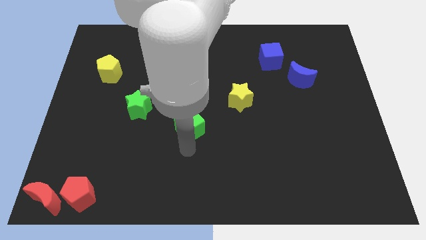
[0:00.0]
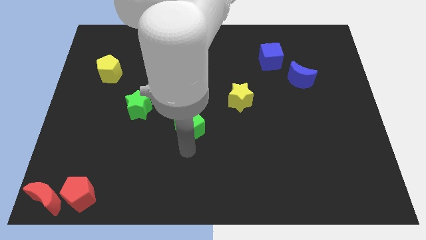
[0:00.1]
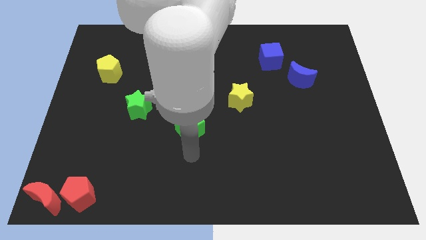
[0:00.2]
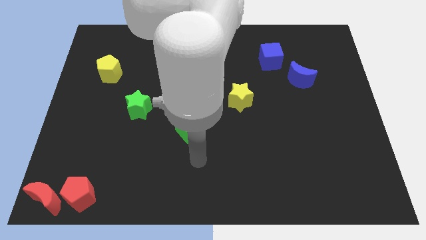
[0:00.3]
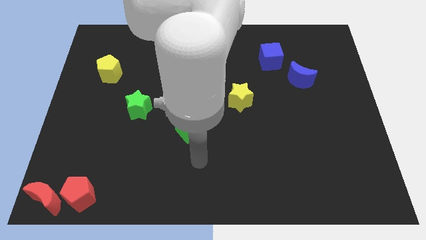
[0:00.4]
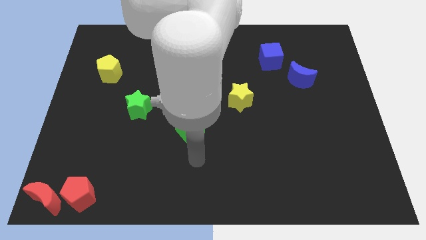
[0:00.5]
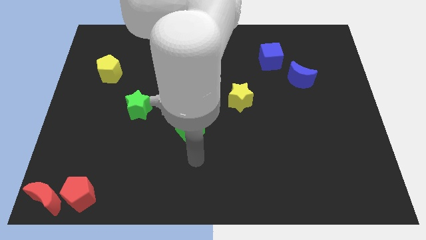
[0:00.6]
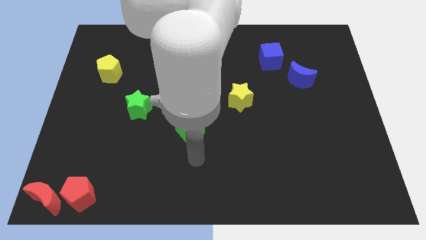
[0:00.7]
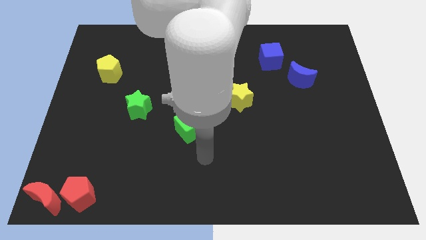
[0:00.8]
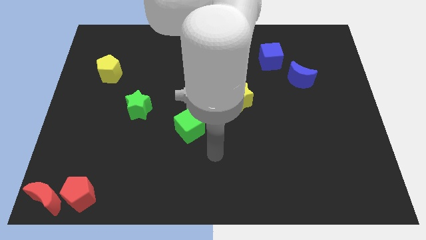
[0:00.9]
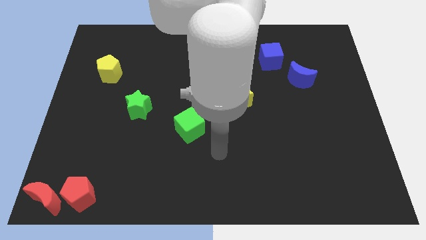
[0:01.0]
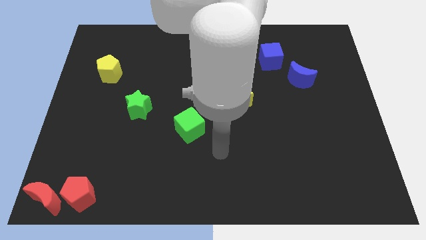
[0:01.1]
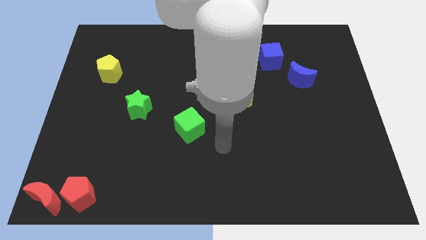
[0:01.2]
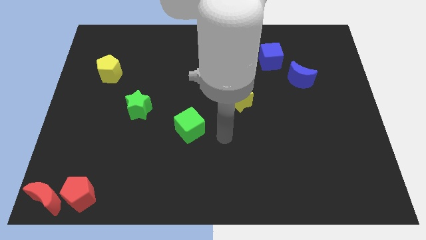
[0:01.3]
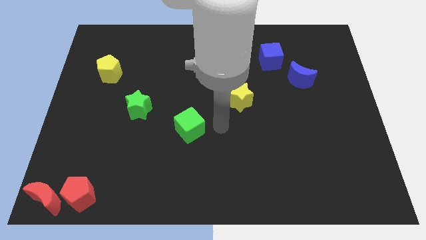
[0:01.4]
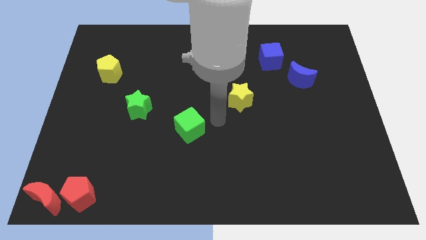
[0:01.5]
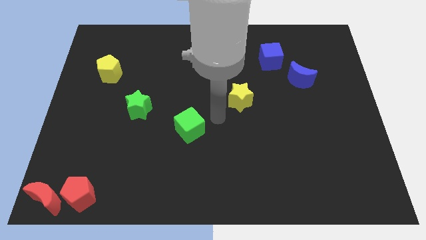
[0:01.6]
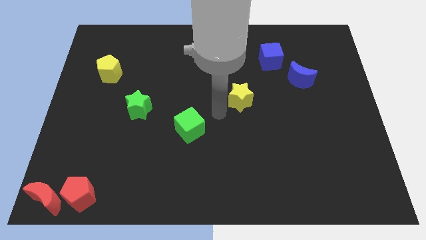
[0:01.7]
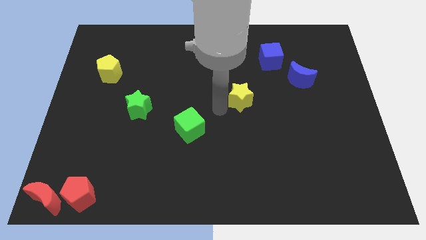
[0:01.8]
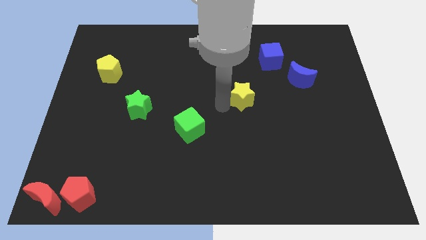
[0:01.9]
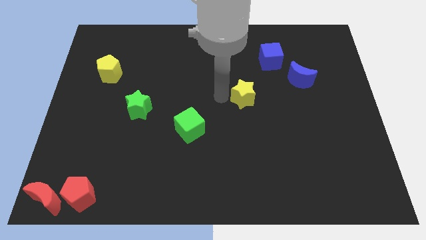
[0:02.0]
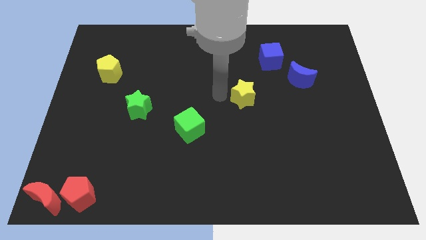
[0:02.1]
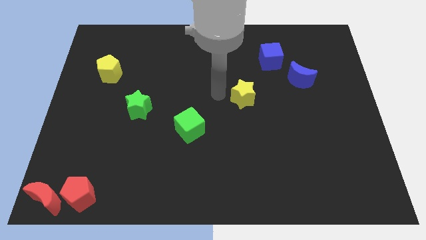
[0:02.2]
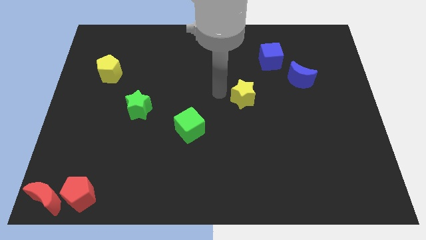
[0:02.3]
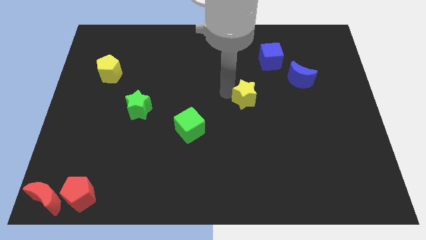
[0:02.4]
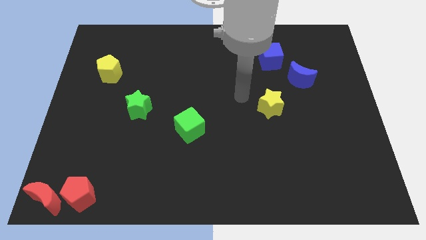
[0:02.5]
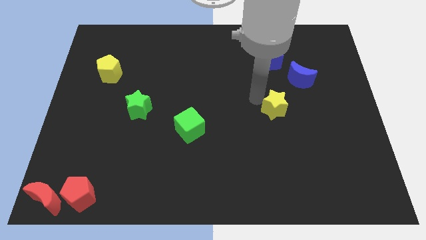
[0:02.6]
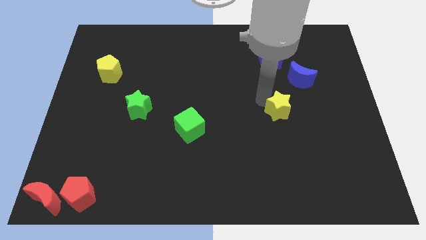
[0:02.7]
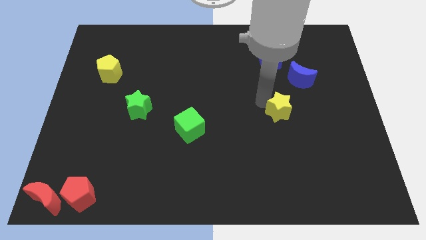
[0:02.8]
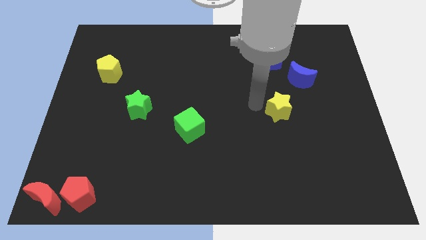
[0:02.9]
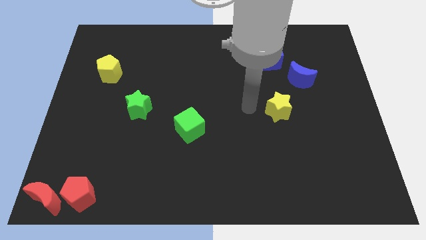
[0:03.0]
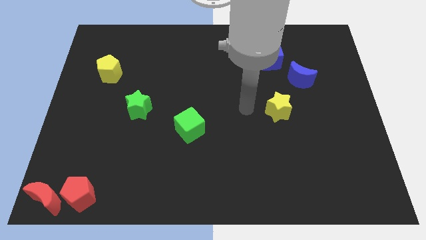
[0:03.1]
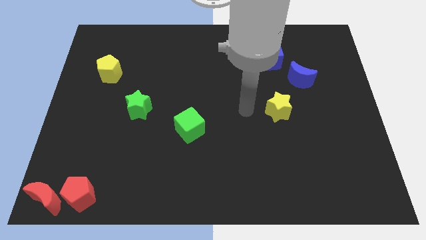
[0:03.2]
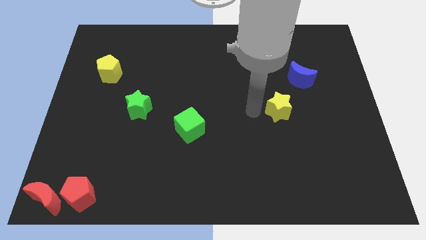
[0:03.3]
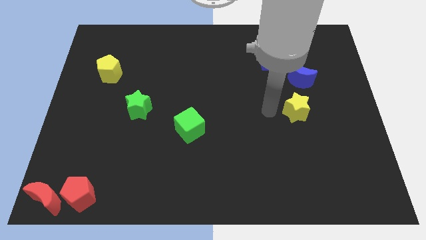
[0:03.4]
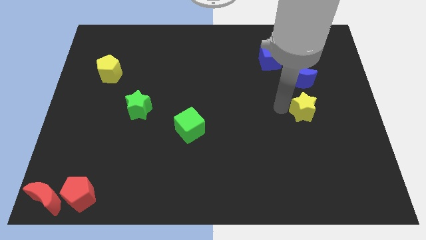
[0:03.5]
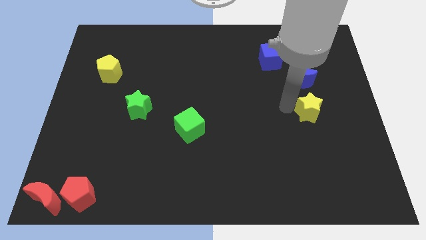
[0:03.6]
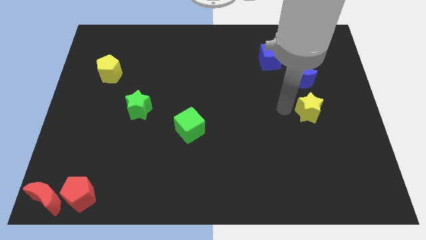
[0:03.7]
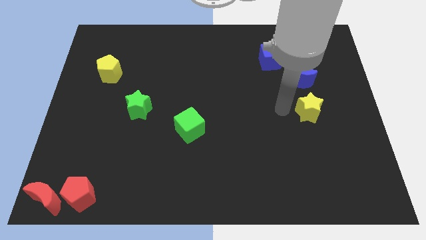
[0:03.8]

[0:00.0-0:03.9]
place the yellow star below the blue moon

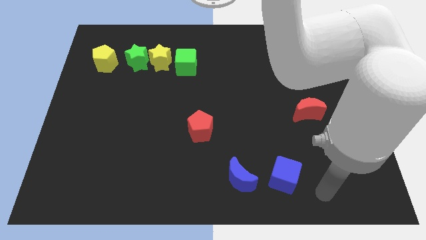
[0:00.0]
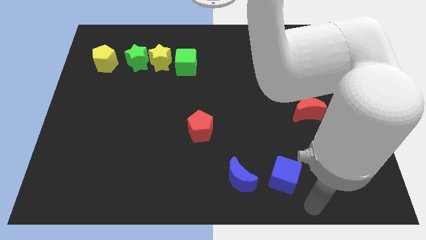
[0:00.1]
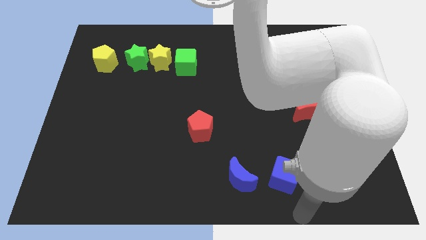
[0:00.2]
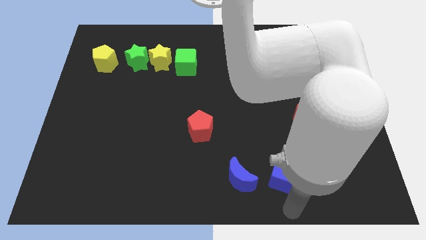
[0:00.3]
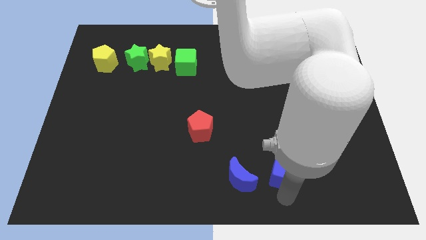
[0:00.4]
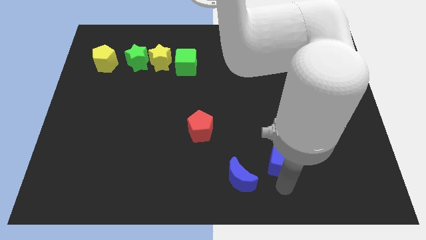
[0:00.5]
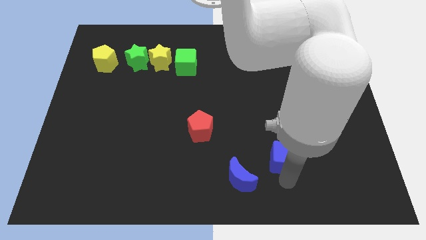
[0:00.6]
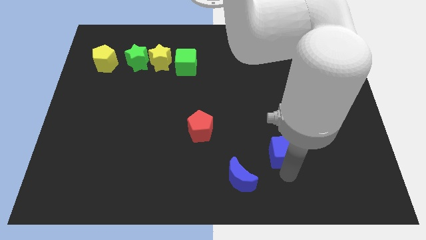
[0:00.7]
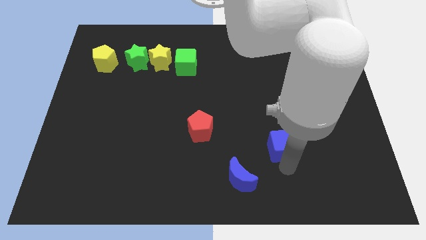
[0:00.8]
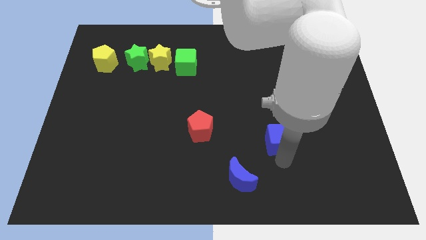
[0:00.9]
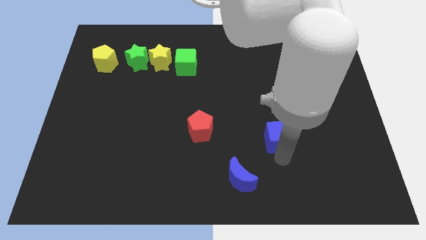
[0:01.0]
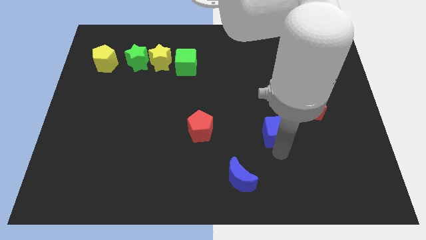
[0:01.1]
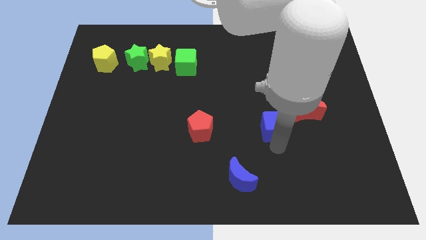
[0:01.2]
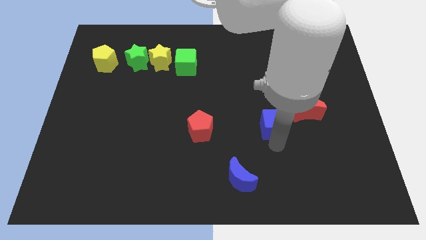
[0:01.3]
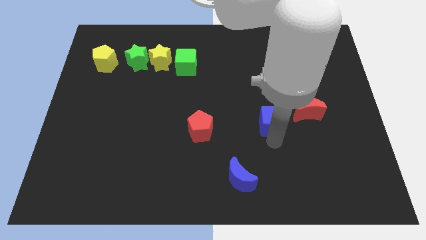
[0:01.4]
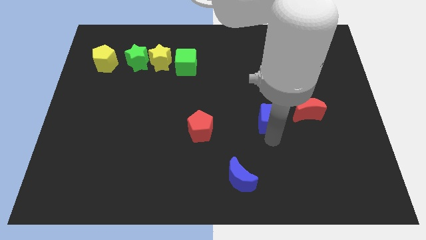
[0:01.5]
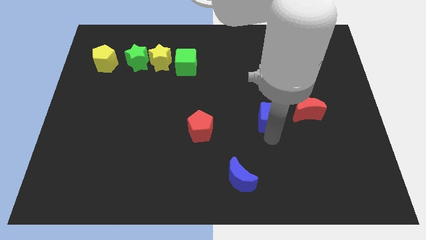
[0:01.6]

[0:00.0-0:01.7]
push the blue cube to the left side of the red moon

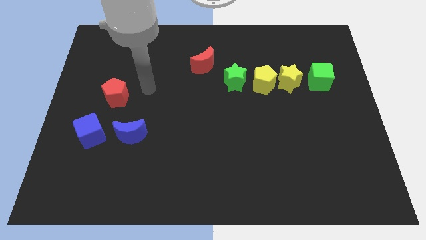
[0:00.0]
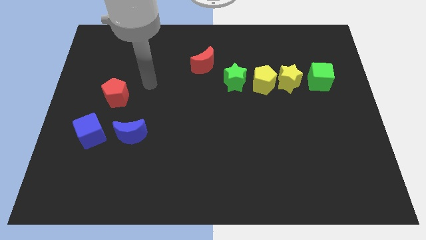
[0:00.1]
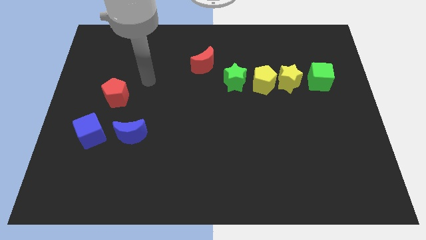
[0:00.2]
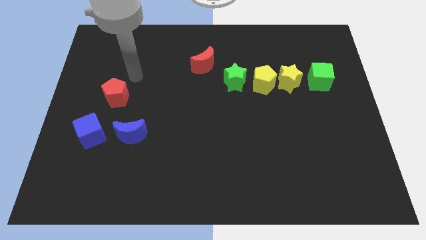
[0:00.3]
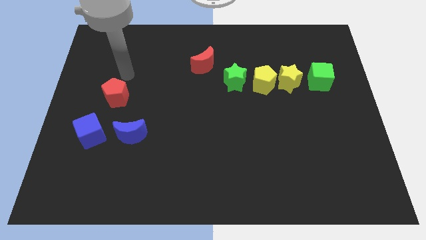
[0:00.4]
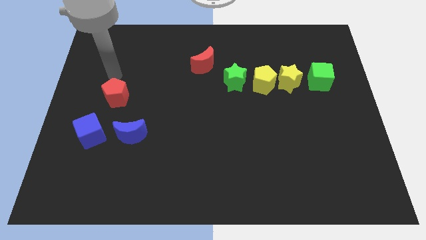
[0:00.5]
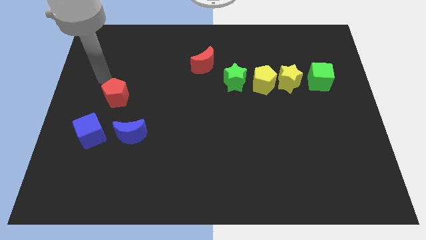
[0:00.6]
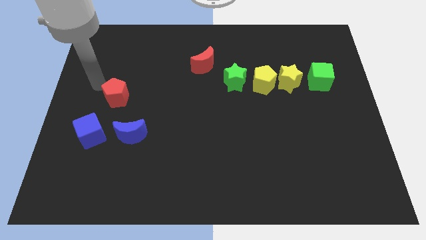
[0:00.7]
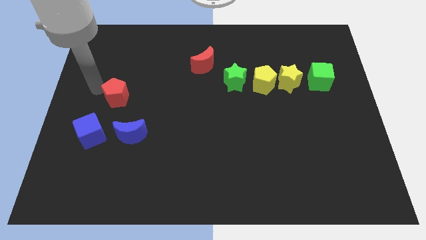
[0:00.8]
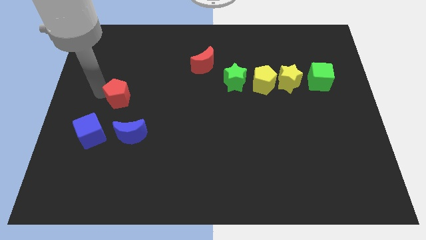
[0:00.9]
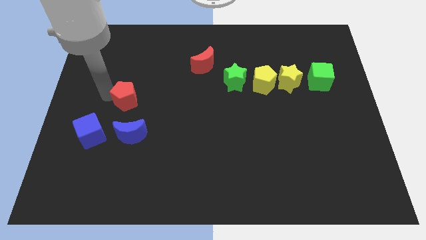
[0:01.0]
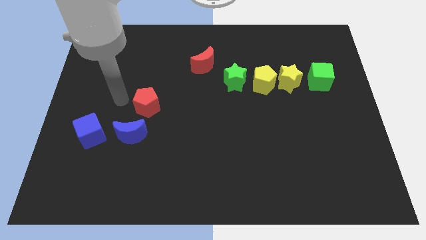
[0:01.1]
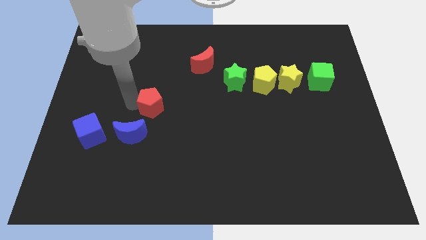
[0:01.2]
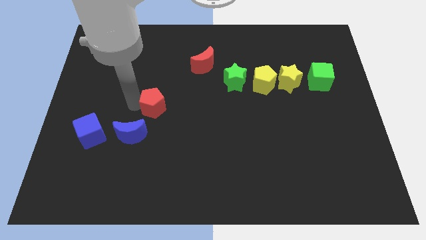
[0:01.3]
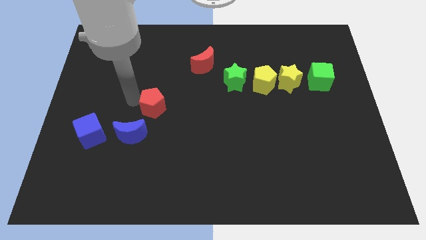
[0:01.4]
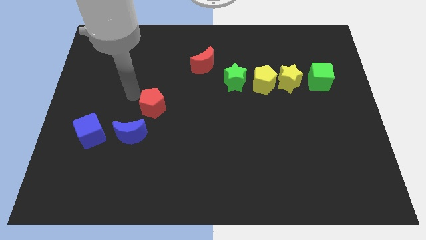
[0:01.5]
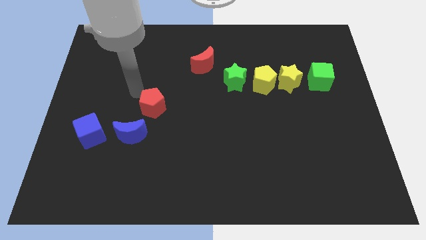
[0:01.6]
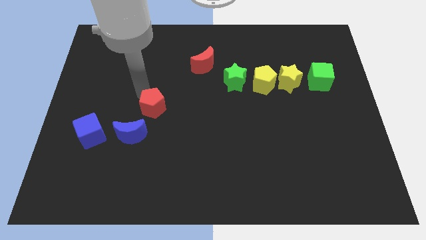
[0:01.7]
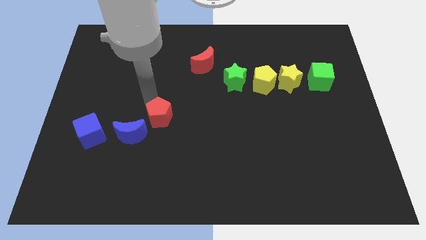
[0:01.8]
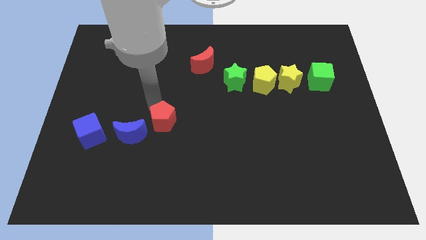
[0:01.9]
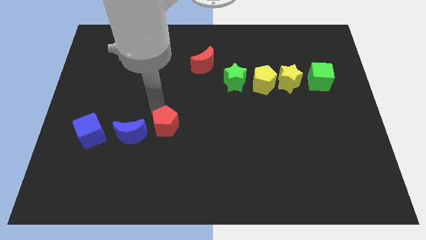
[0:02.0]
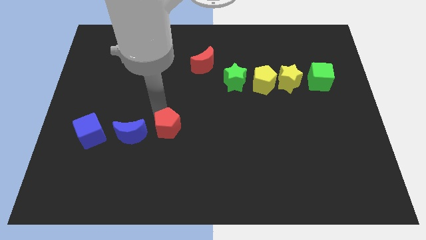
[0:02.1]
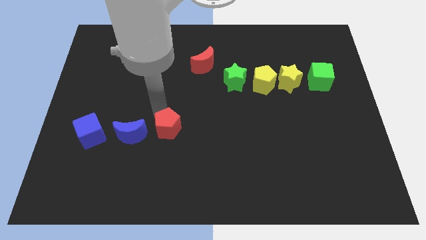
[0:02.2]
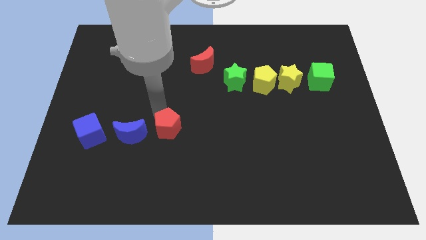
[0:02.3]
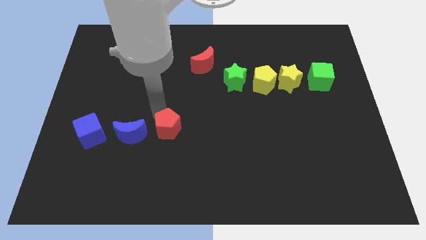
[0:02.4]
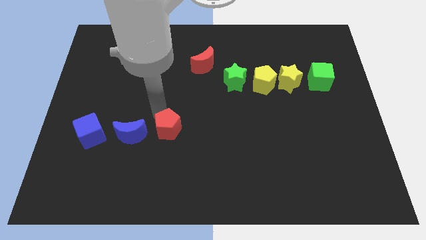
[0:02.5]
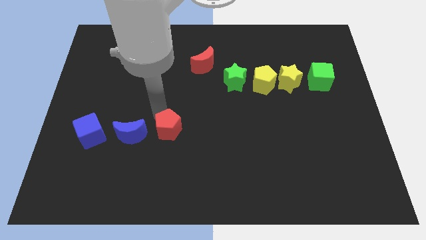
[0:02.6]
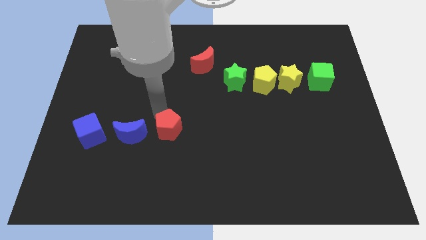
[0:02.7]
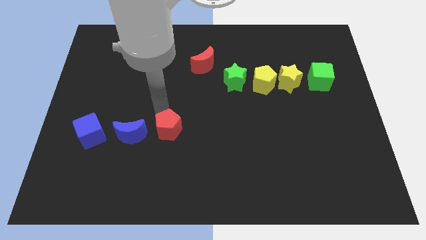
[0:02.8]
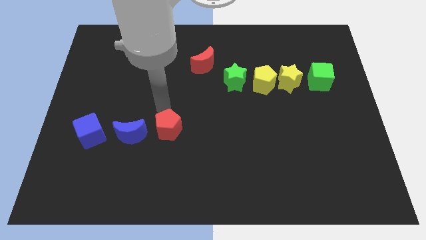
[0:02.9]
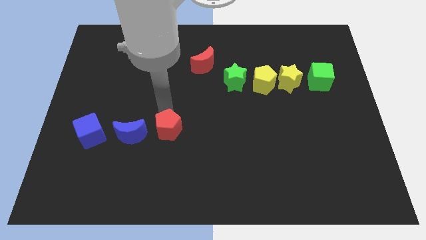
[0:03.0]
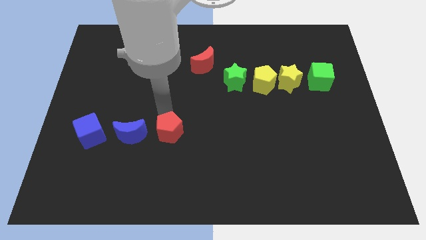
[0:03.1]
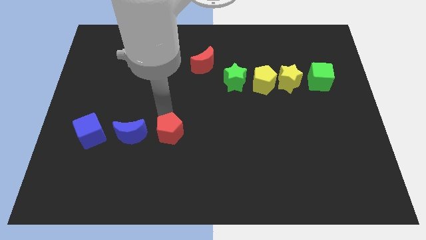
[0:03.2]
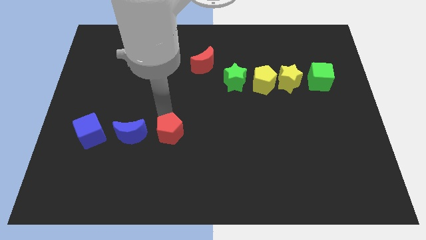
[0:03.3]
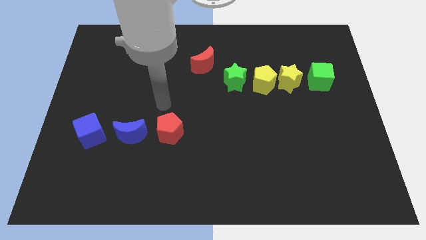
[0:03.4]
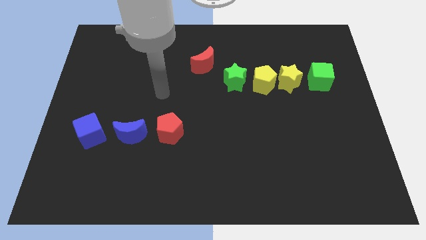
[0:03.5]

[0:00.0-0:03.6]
place the red pentagon at the right side of the blue moon
